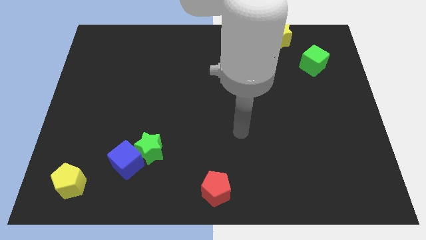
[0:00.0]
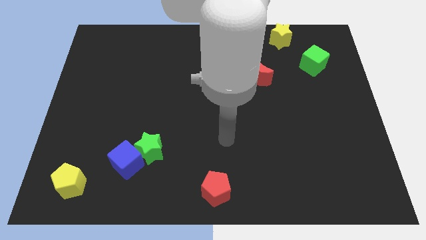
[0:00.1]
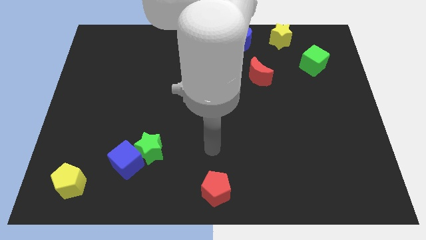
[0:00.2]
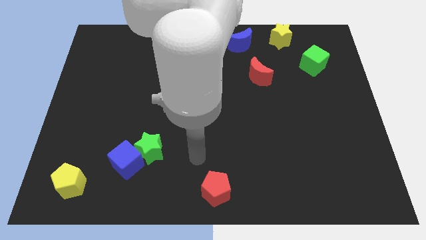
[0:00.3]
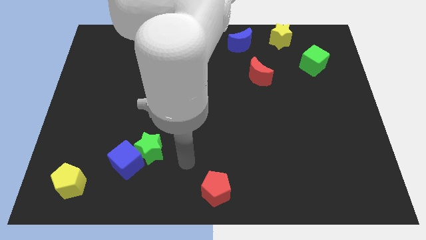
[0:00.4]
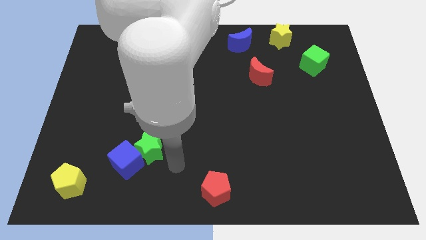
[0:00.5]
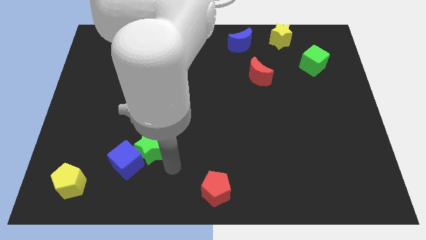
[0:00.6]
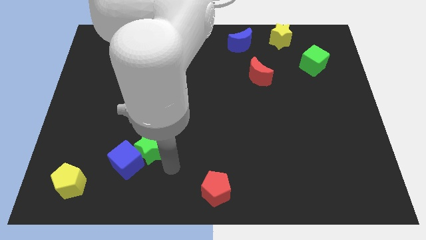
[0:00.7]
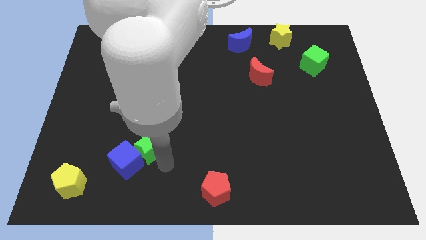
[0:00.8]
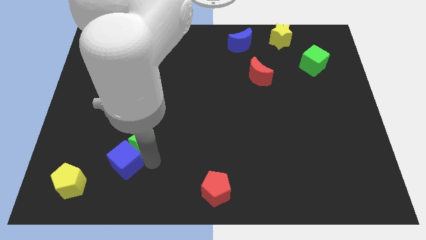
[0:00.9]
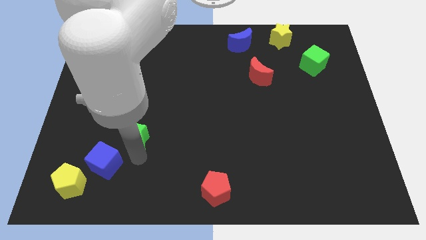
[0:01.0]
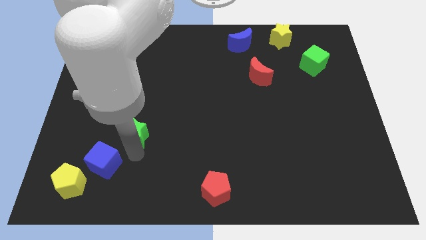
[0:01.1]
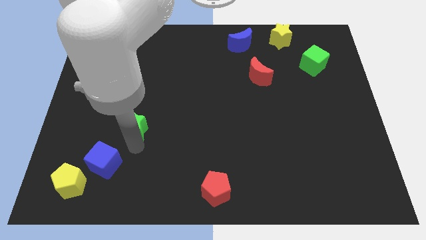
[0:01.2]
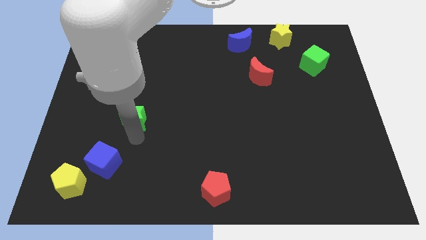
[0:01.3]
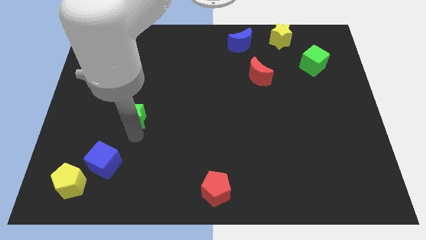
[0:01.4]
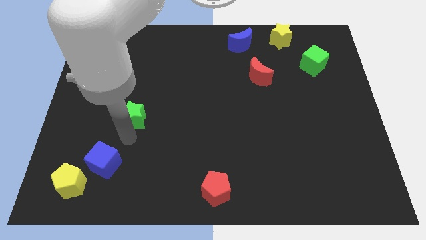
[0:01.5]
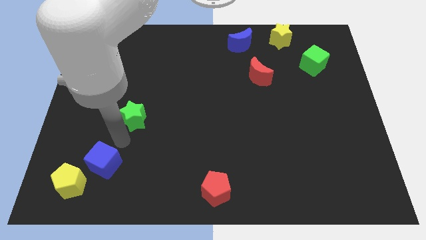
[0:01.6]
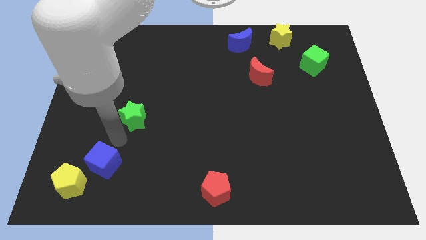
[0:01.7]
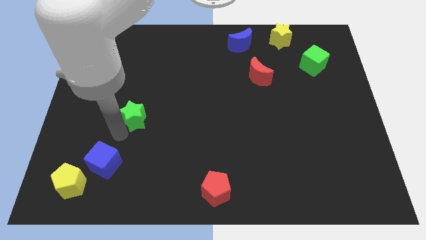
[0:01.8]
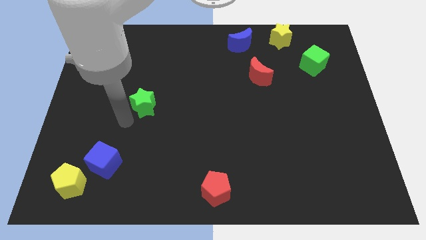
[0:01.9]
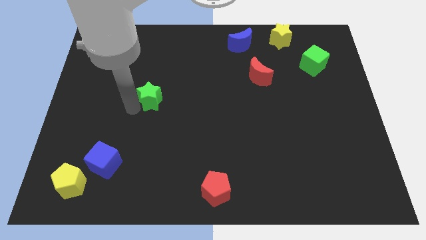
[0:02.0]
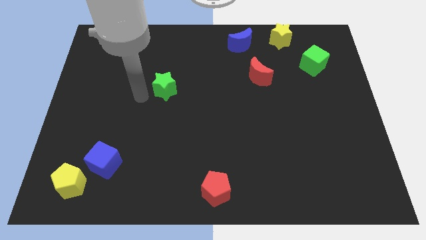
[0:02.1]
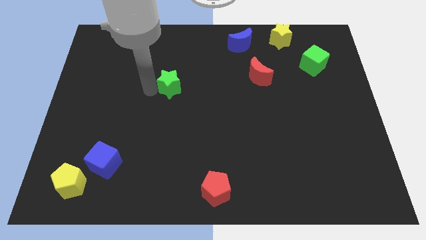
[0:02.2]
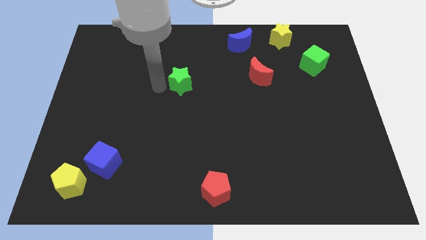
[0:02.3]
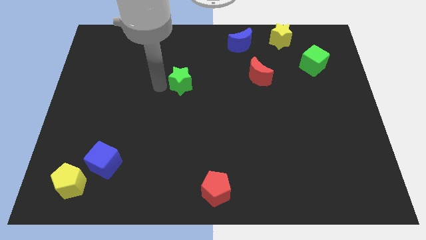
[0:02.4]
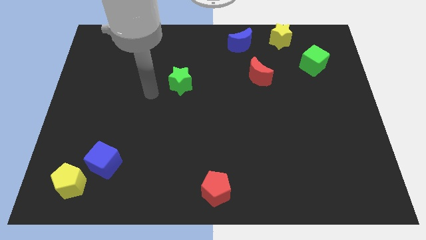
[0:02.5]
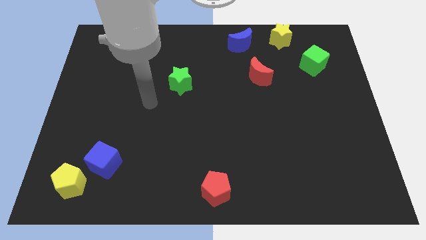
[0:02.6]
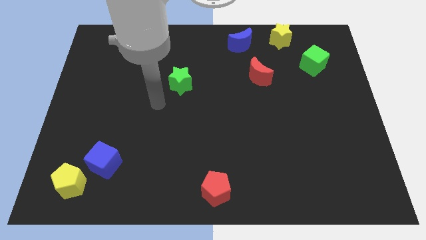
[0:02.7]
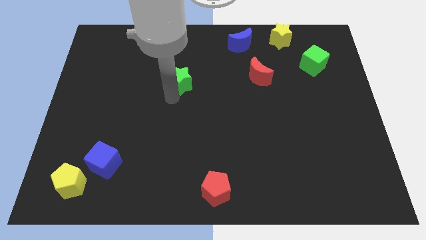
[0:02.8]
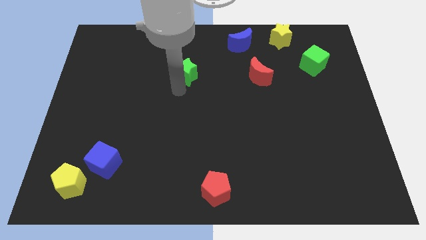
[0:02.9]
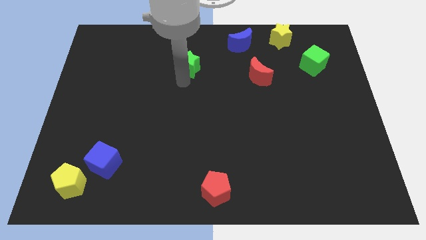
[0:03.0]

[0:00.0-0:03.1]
push the green star to the left side of the red crescent

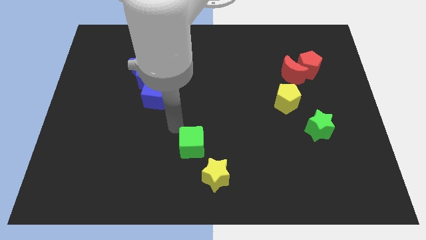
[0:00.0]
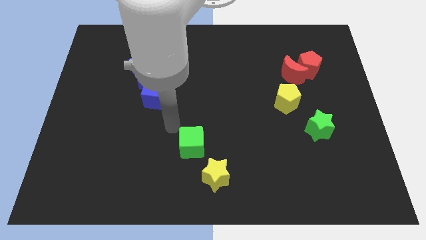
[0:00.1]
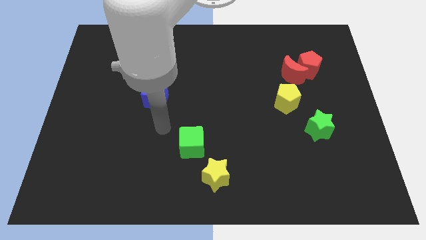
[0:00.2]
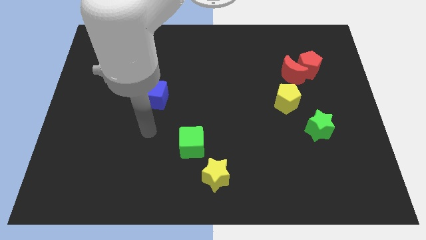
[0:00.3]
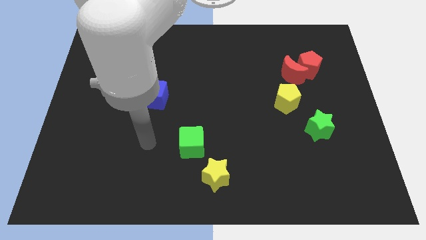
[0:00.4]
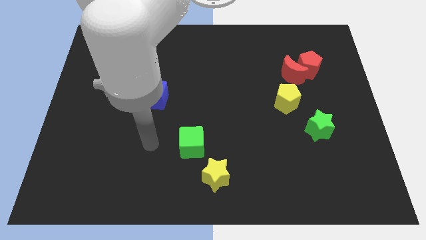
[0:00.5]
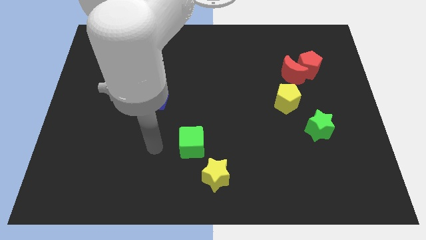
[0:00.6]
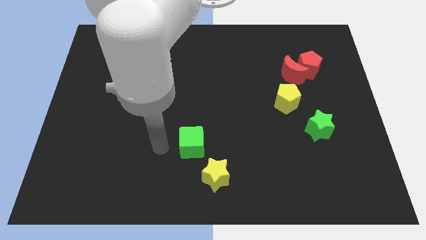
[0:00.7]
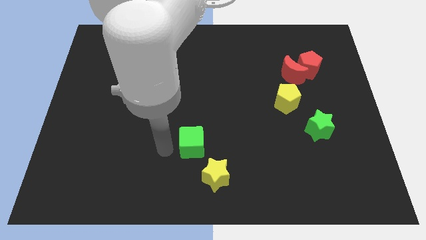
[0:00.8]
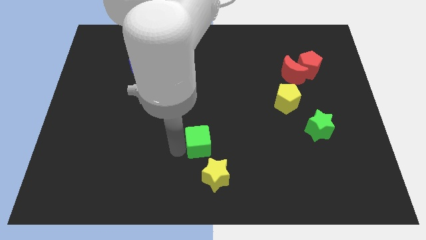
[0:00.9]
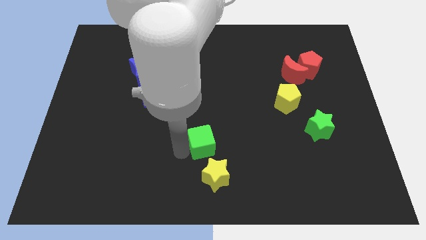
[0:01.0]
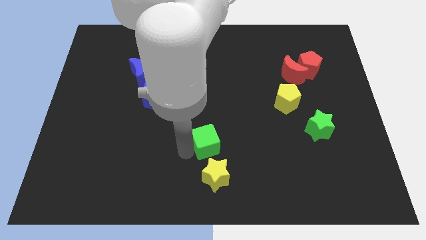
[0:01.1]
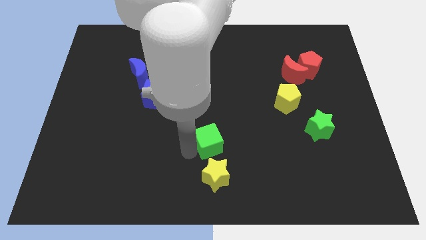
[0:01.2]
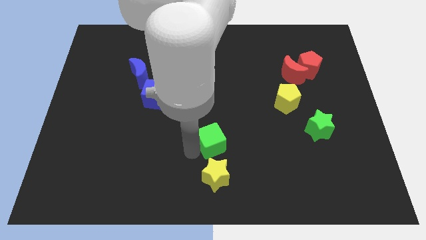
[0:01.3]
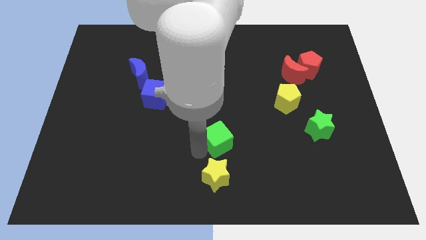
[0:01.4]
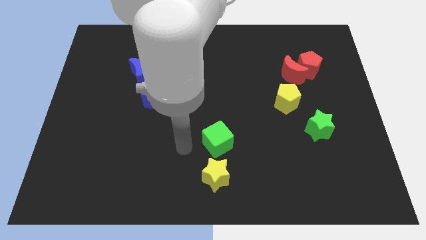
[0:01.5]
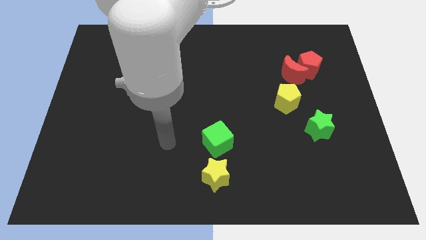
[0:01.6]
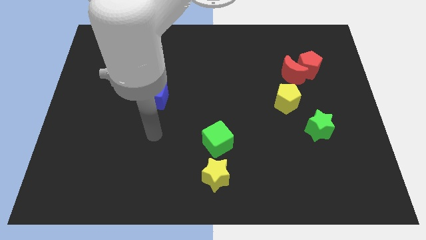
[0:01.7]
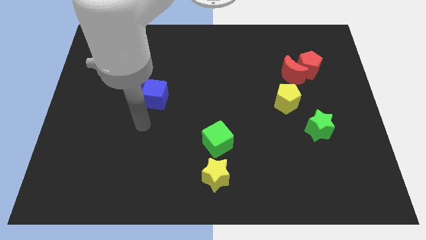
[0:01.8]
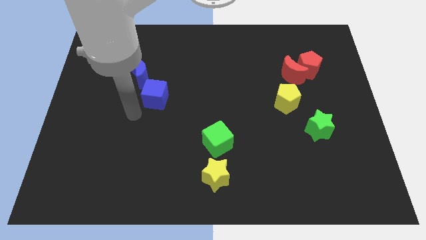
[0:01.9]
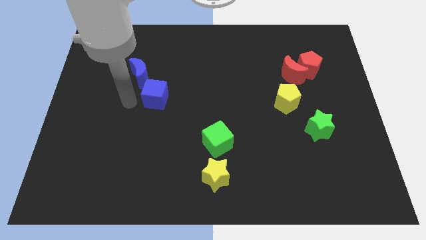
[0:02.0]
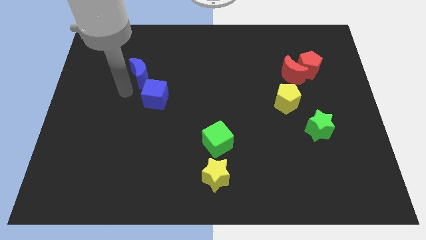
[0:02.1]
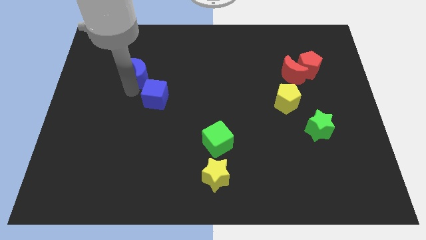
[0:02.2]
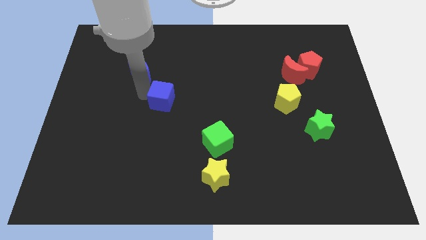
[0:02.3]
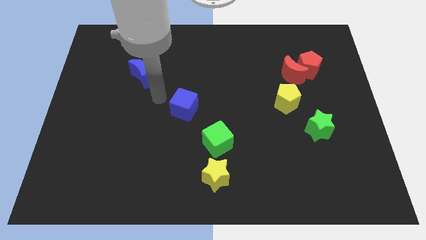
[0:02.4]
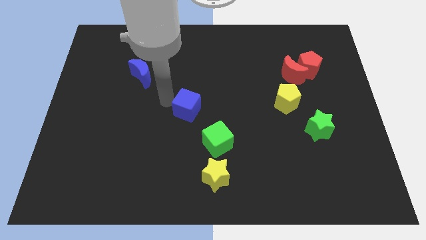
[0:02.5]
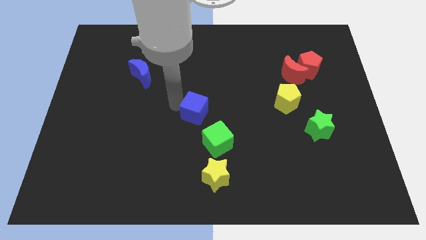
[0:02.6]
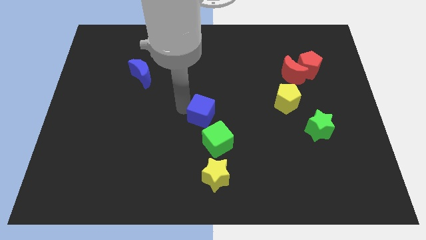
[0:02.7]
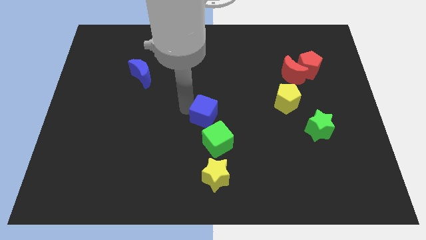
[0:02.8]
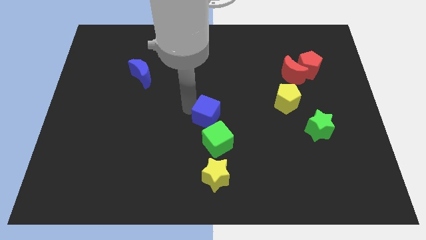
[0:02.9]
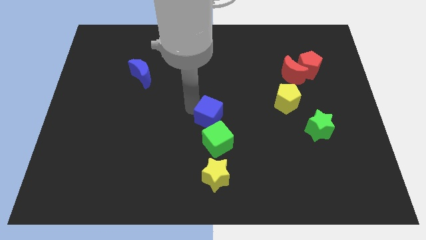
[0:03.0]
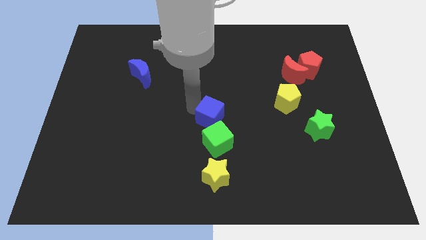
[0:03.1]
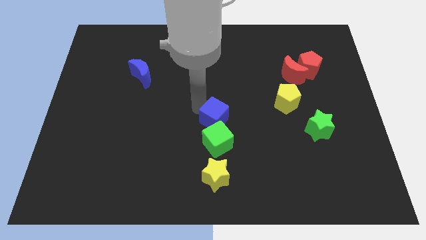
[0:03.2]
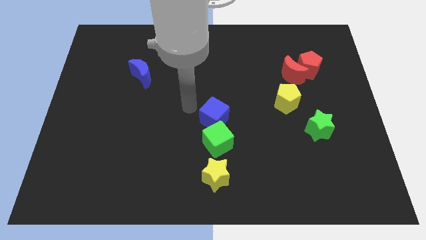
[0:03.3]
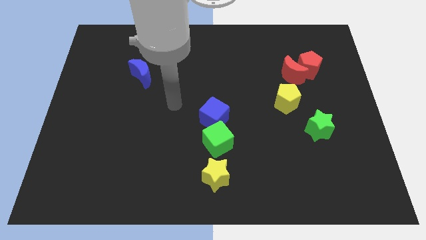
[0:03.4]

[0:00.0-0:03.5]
place green cube and blue cube on top of yellow star

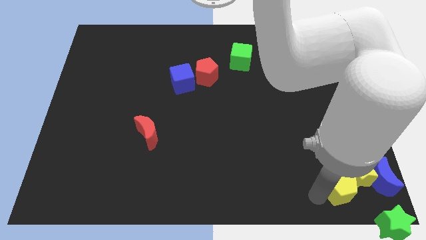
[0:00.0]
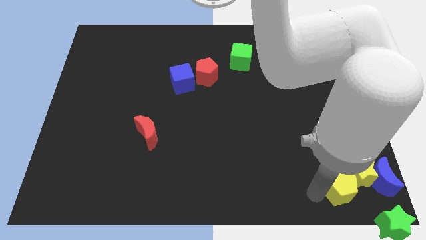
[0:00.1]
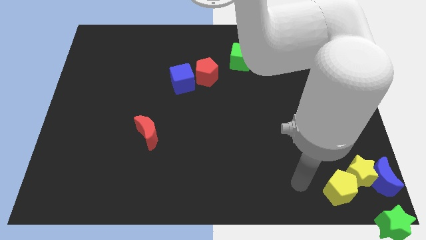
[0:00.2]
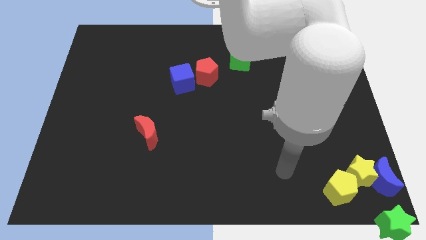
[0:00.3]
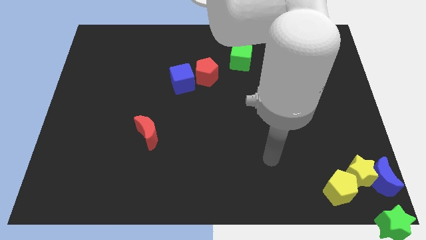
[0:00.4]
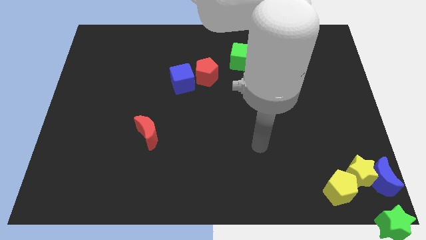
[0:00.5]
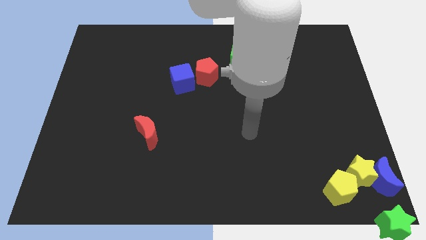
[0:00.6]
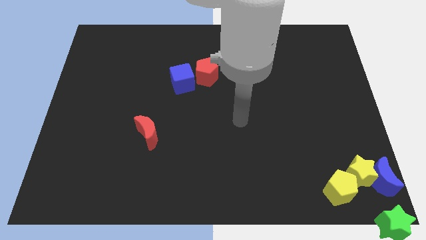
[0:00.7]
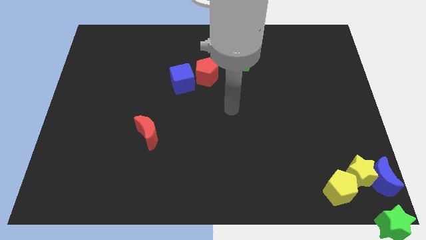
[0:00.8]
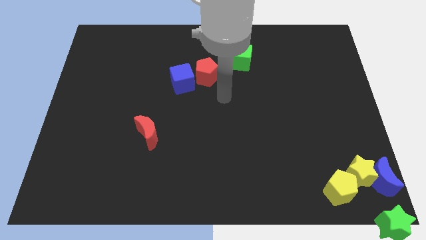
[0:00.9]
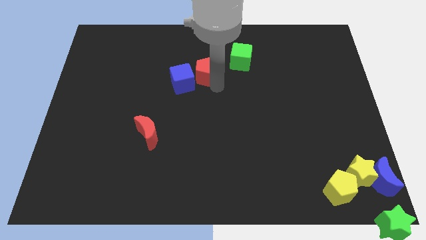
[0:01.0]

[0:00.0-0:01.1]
move your arm away from the yellow pentagon

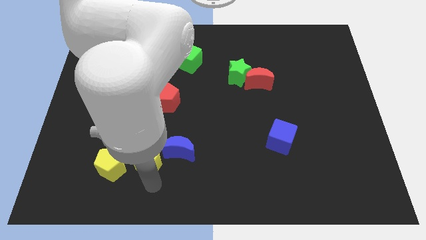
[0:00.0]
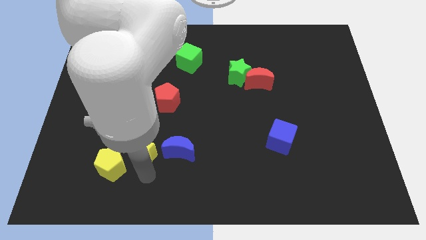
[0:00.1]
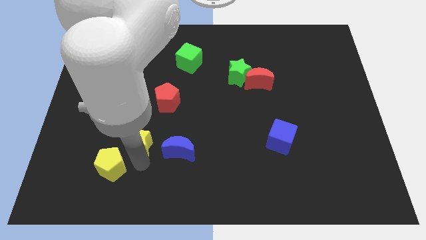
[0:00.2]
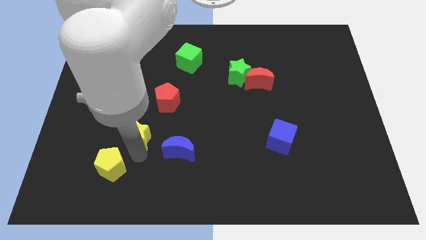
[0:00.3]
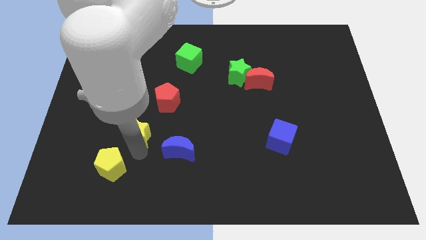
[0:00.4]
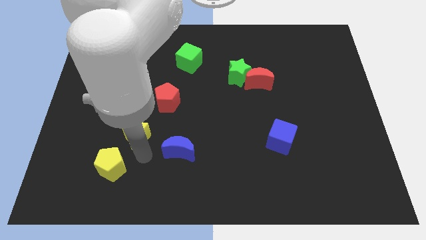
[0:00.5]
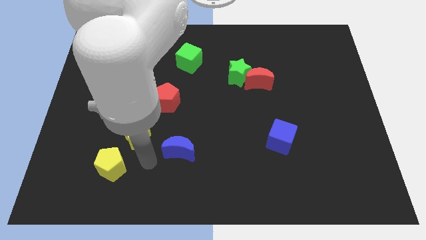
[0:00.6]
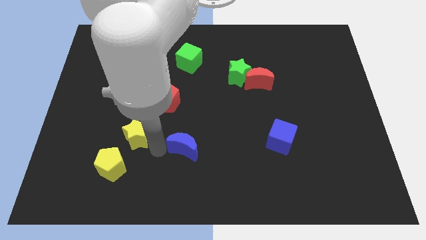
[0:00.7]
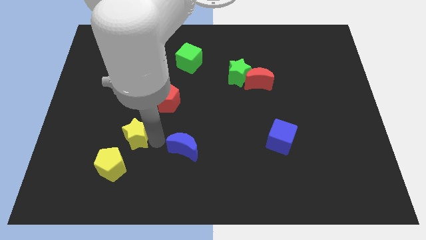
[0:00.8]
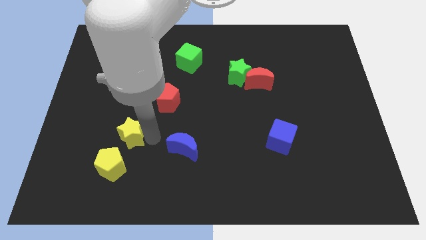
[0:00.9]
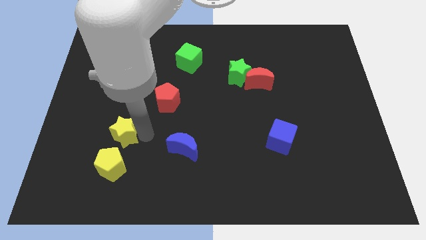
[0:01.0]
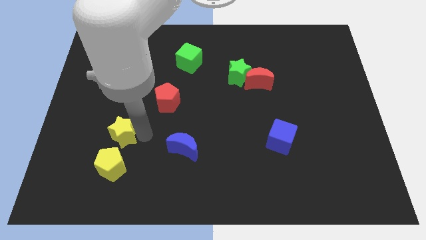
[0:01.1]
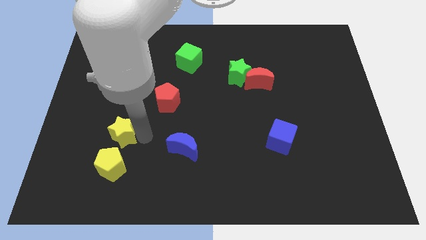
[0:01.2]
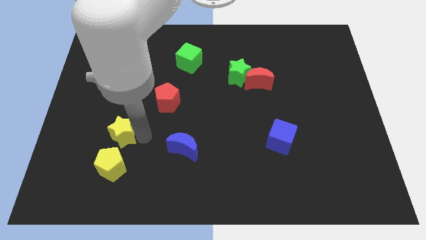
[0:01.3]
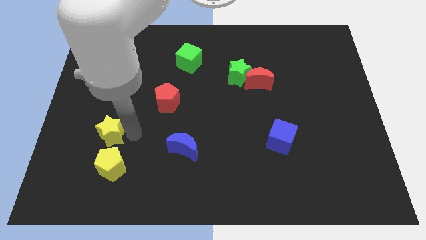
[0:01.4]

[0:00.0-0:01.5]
push the yellow star to the top side of the yellow pentagon
